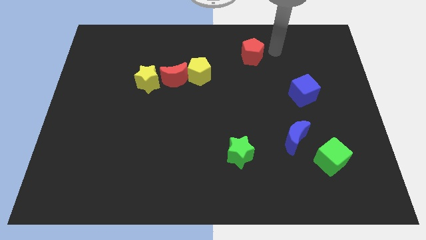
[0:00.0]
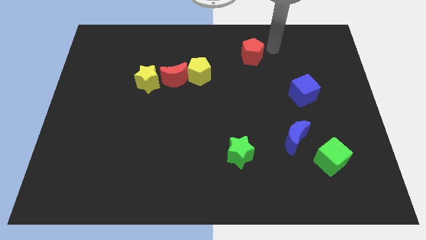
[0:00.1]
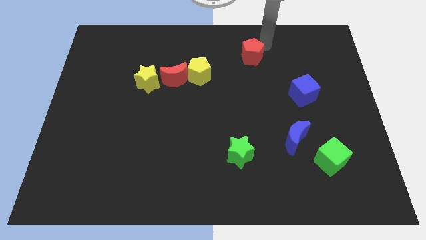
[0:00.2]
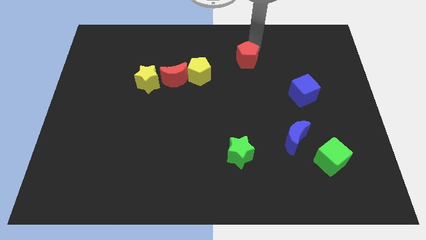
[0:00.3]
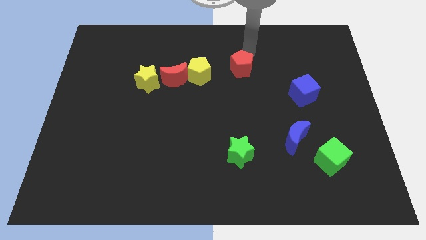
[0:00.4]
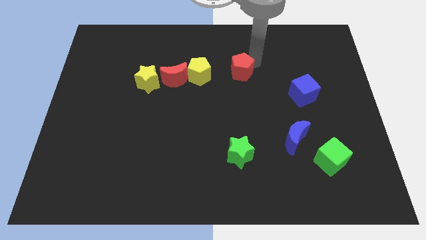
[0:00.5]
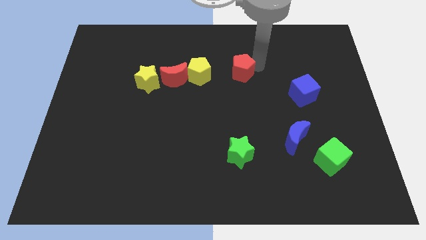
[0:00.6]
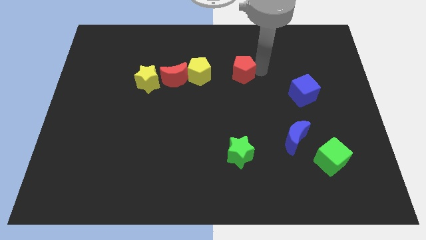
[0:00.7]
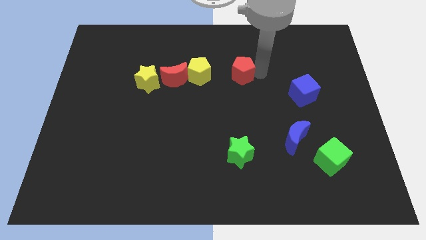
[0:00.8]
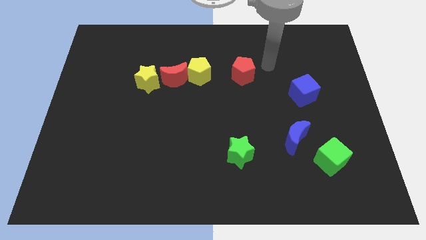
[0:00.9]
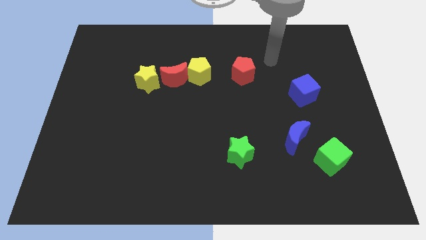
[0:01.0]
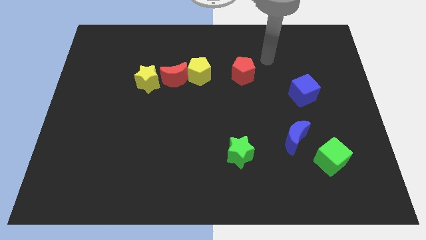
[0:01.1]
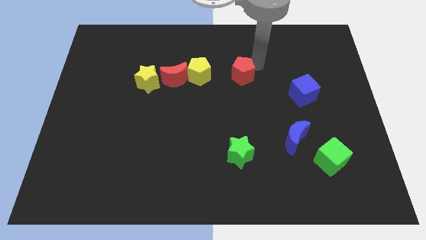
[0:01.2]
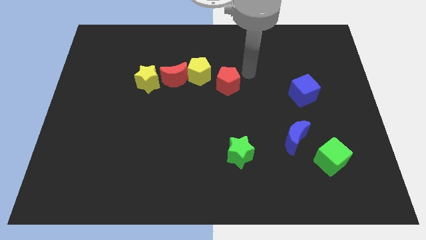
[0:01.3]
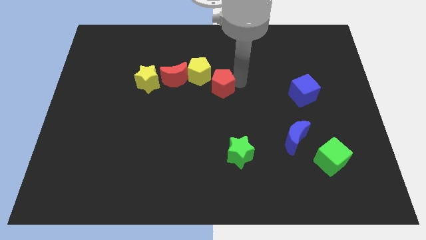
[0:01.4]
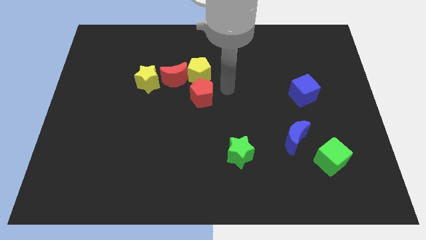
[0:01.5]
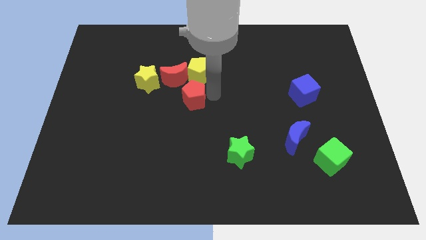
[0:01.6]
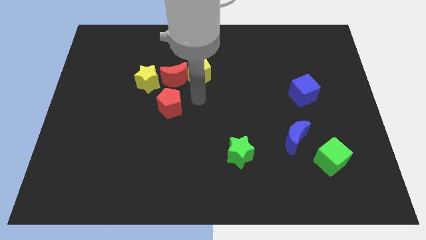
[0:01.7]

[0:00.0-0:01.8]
place the red pentagon under the red crescent

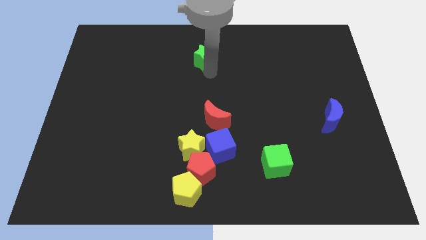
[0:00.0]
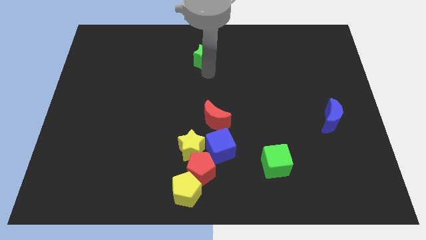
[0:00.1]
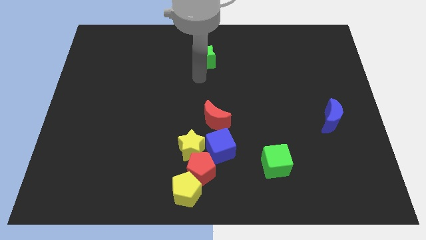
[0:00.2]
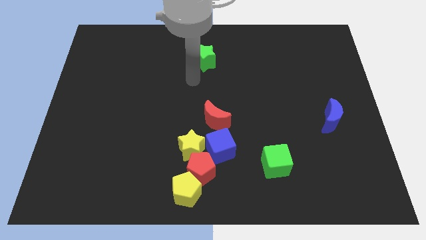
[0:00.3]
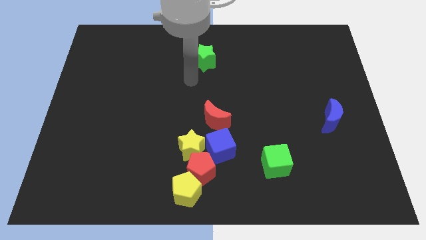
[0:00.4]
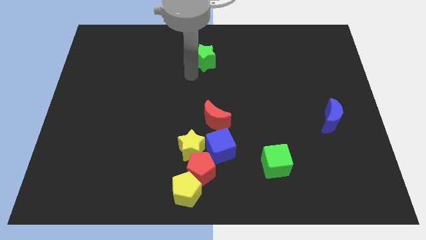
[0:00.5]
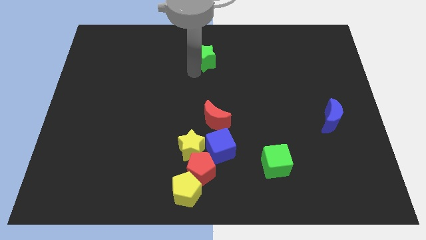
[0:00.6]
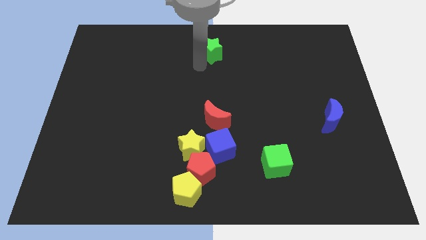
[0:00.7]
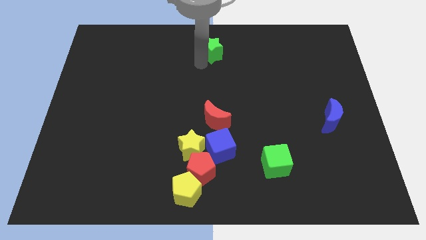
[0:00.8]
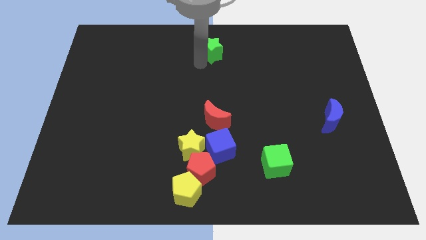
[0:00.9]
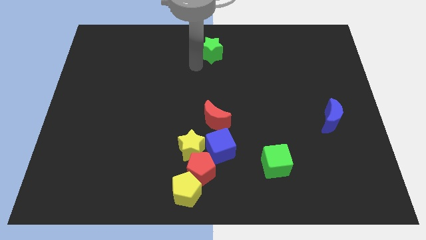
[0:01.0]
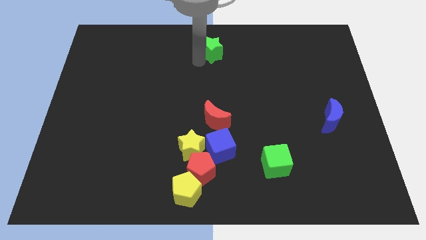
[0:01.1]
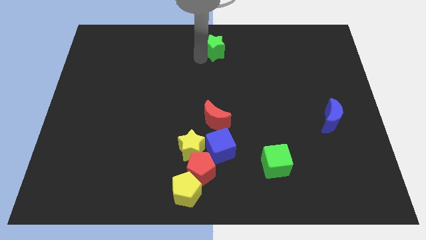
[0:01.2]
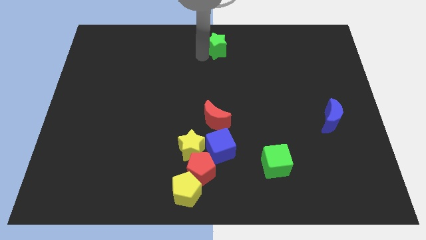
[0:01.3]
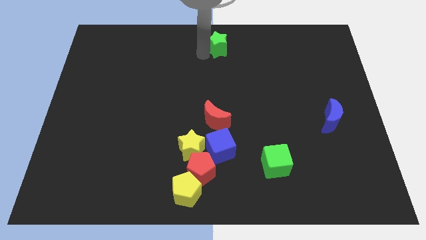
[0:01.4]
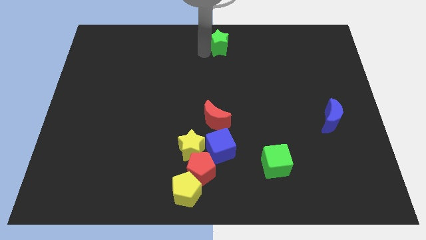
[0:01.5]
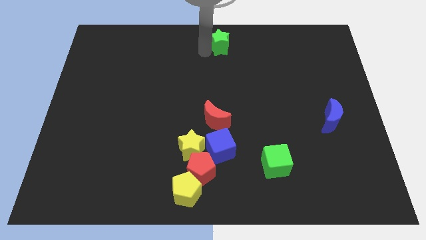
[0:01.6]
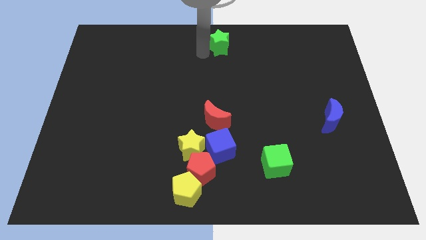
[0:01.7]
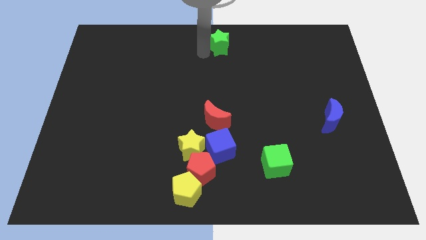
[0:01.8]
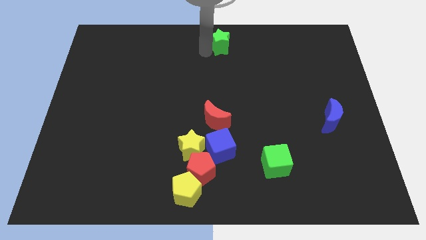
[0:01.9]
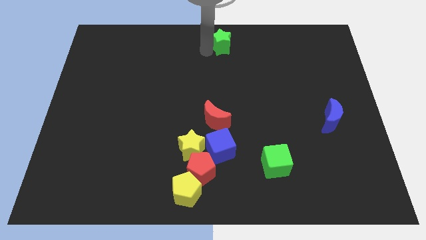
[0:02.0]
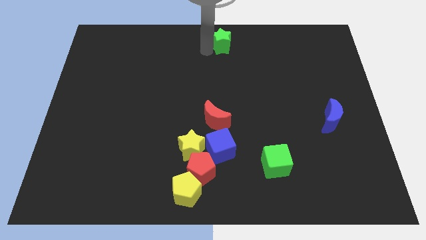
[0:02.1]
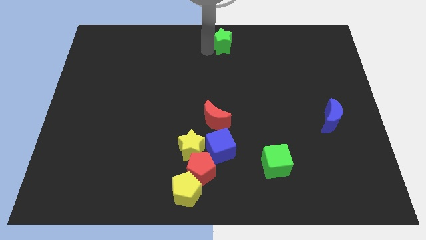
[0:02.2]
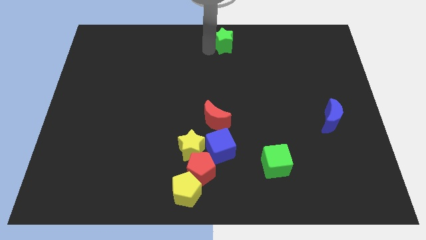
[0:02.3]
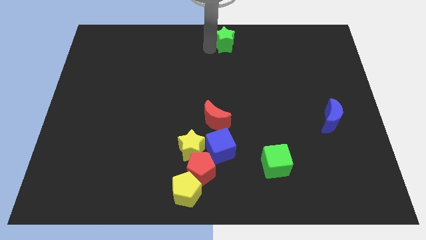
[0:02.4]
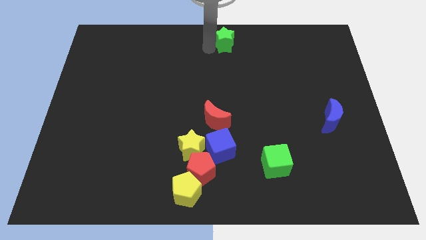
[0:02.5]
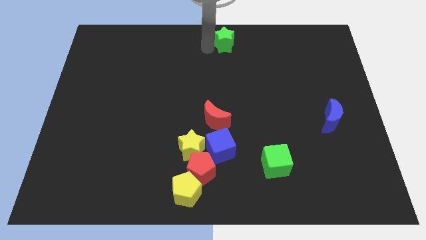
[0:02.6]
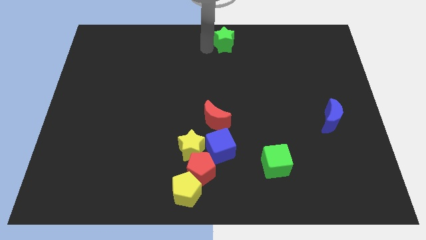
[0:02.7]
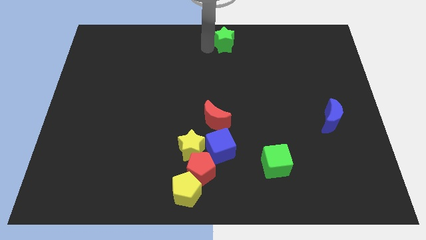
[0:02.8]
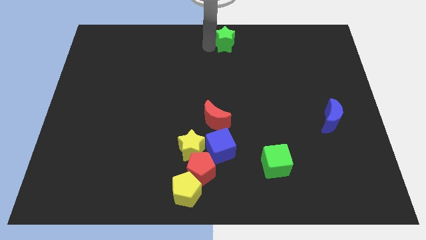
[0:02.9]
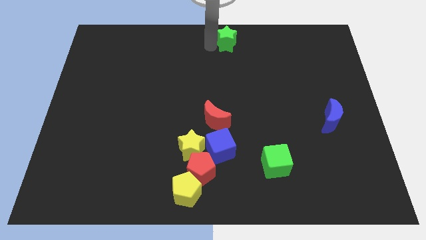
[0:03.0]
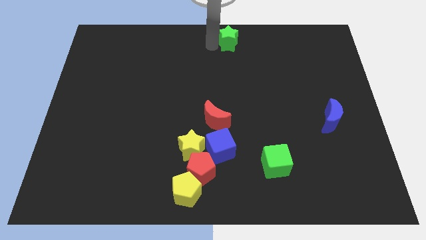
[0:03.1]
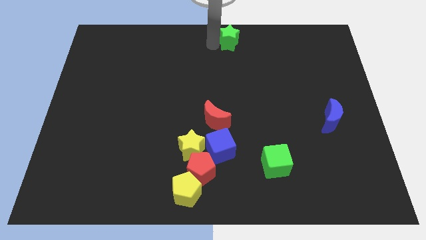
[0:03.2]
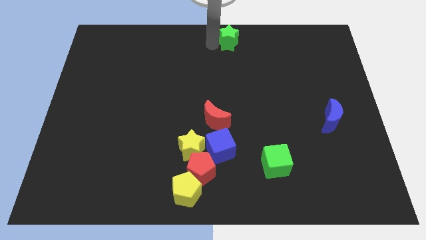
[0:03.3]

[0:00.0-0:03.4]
move the green star to the top center of the board

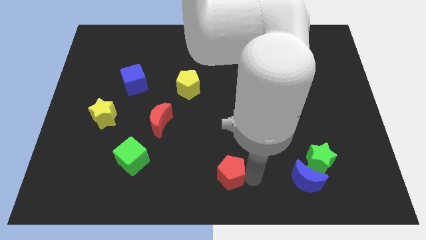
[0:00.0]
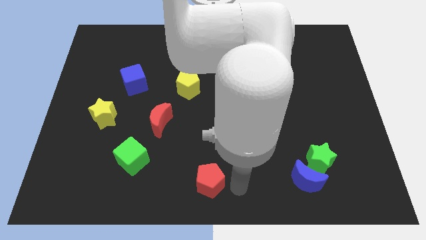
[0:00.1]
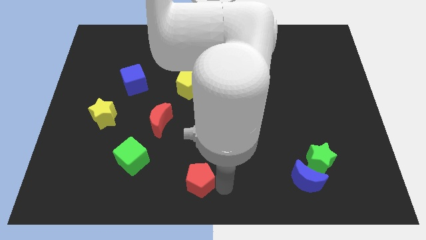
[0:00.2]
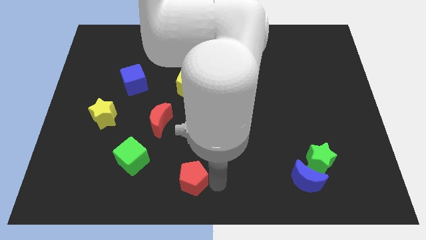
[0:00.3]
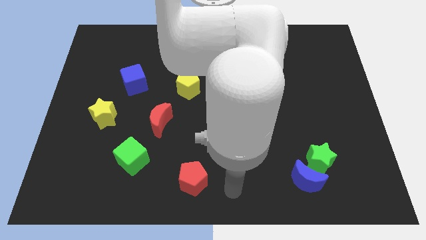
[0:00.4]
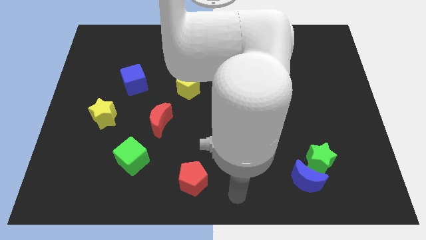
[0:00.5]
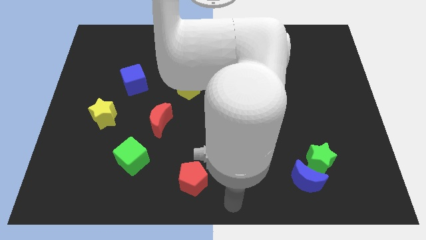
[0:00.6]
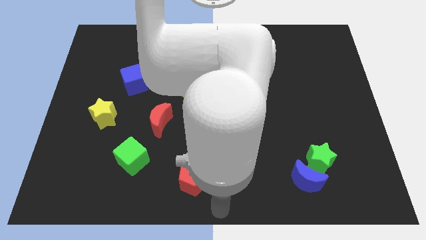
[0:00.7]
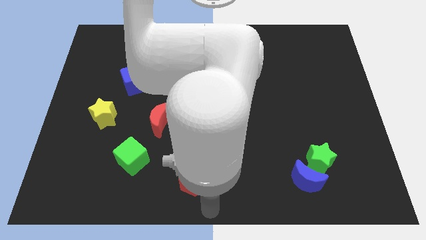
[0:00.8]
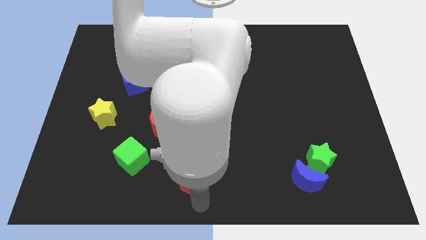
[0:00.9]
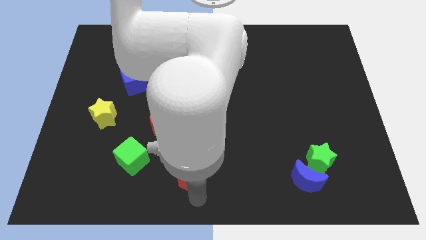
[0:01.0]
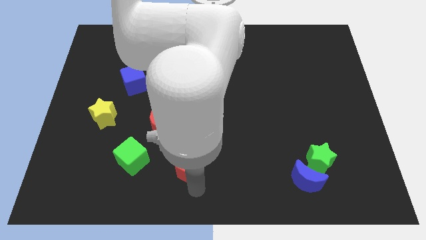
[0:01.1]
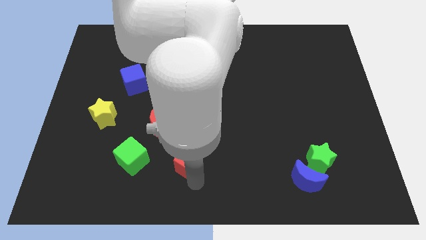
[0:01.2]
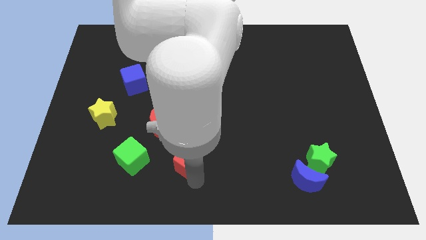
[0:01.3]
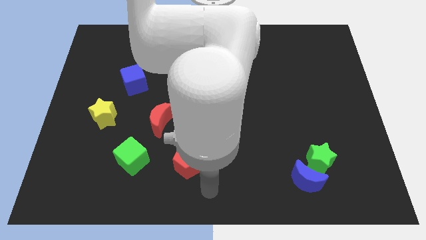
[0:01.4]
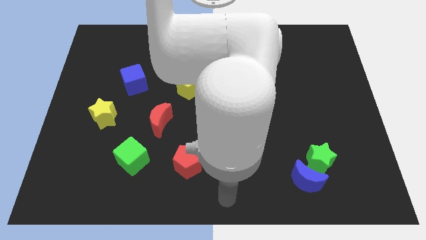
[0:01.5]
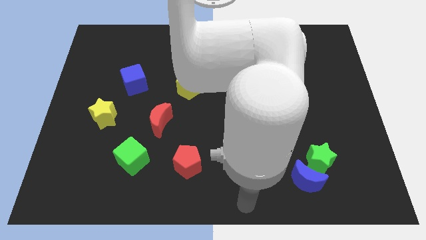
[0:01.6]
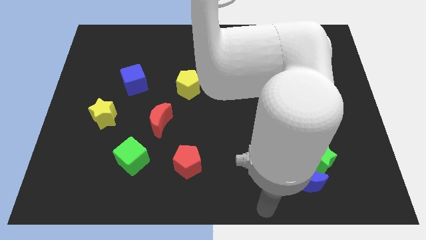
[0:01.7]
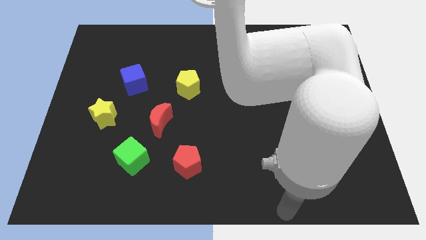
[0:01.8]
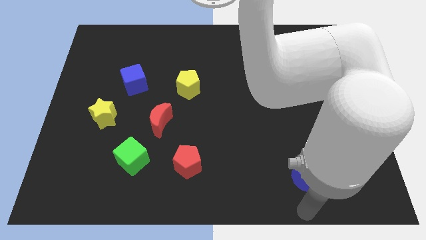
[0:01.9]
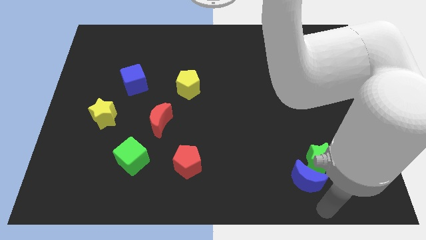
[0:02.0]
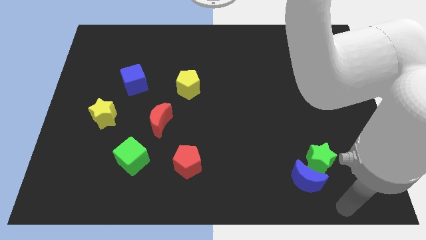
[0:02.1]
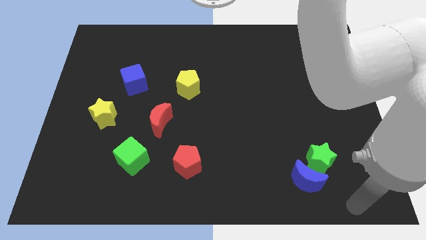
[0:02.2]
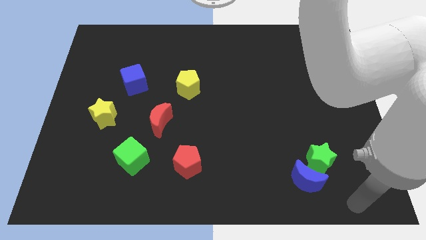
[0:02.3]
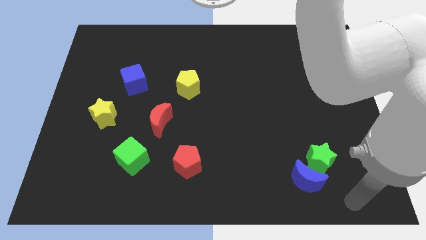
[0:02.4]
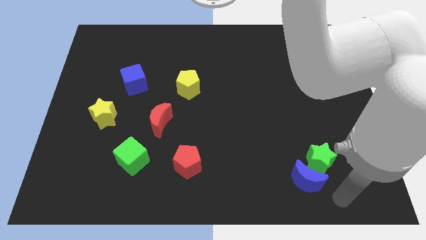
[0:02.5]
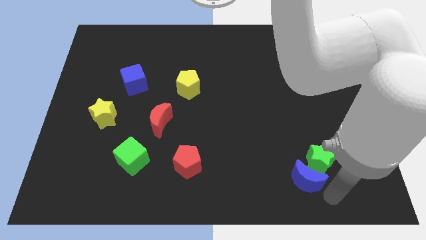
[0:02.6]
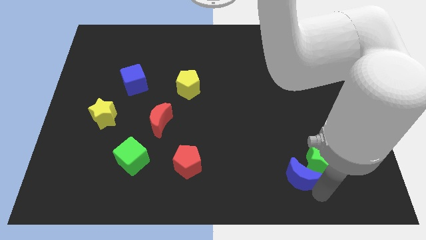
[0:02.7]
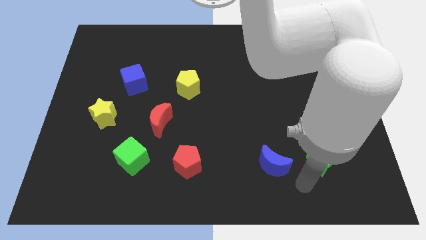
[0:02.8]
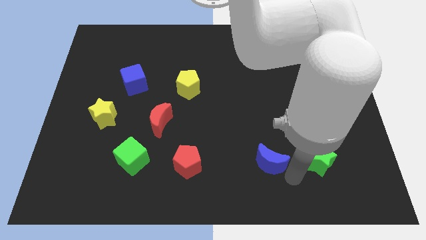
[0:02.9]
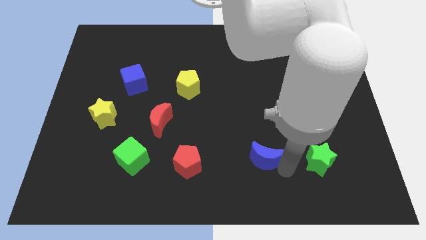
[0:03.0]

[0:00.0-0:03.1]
move blue moon left to the green star

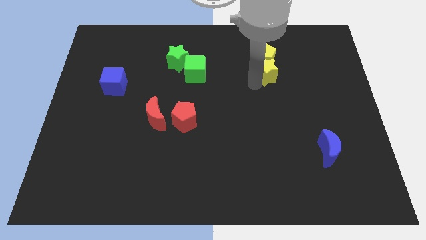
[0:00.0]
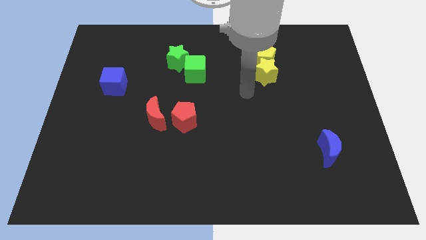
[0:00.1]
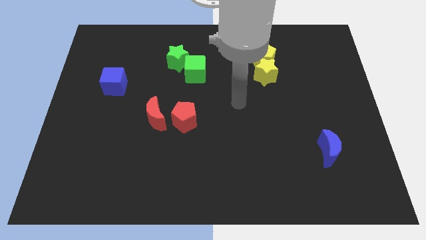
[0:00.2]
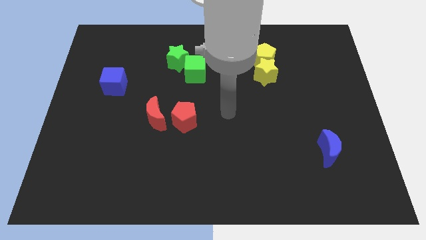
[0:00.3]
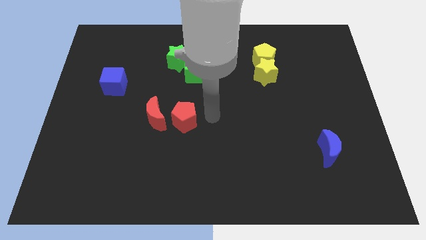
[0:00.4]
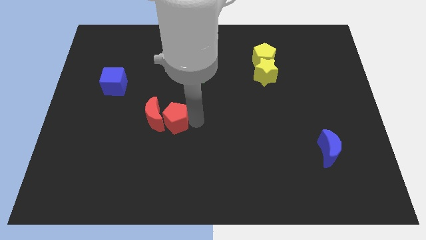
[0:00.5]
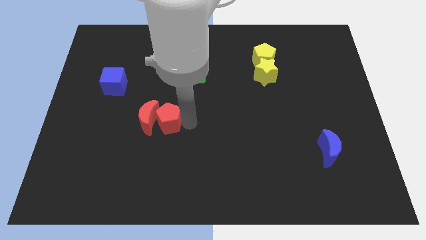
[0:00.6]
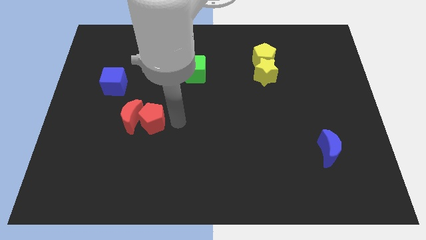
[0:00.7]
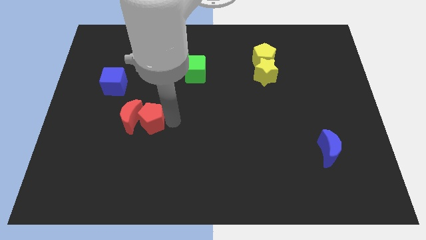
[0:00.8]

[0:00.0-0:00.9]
push red crescent with red pentagon
